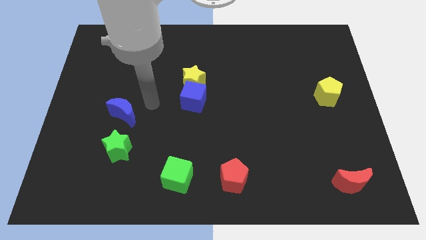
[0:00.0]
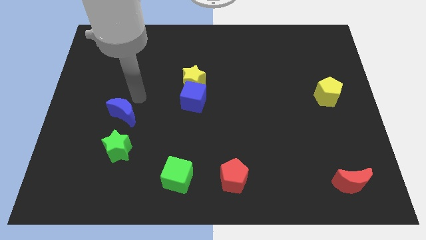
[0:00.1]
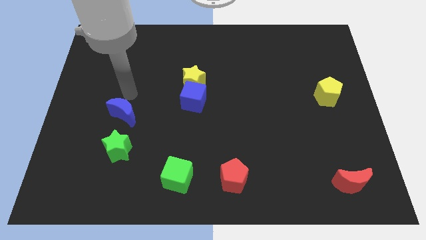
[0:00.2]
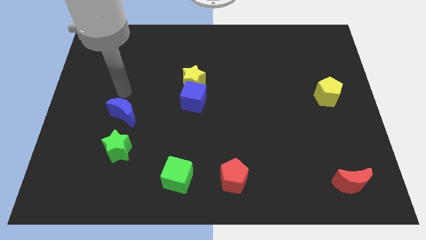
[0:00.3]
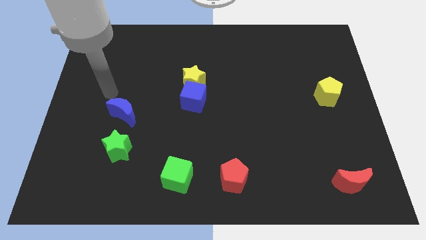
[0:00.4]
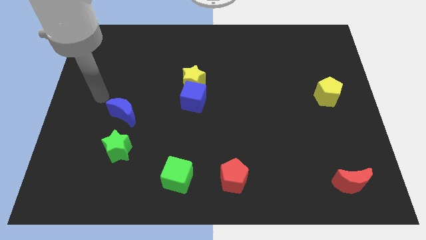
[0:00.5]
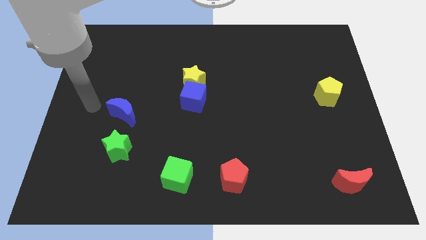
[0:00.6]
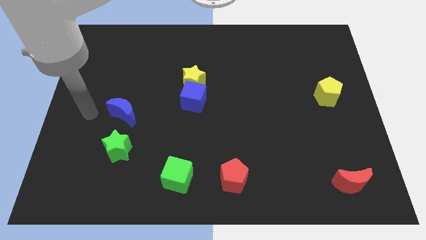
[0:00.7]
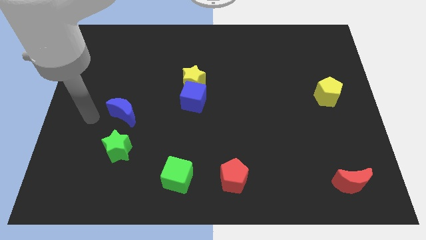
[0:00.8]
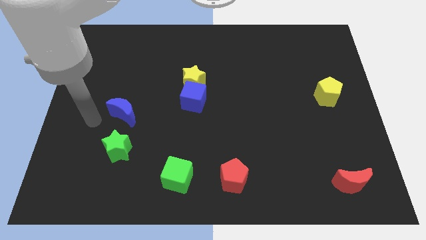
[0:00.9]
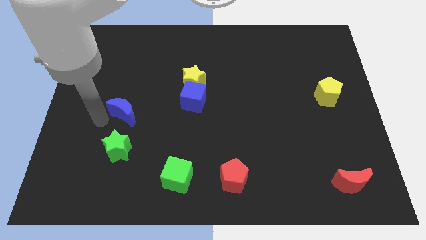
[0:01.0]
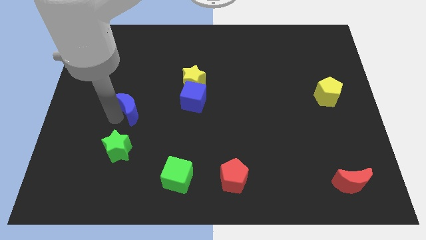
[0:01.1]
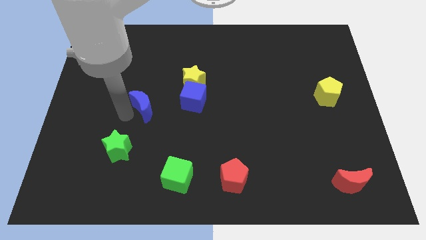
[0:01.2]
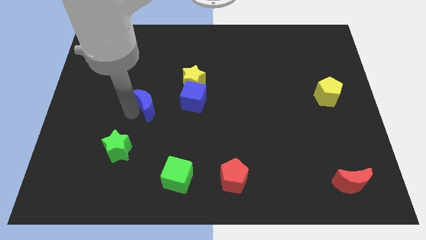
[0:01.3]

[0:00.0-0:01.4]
drag the blue crescent diagonally on the top right side of the green star

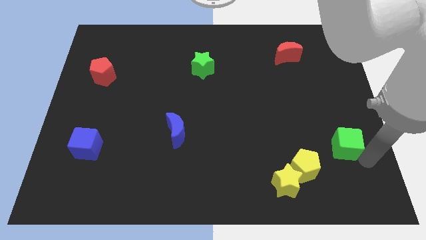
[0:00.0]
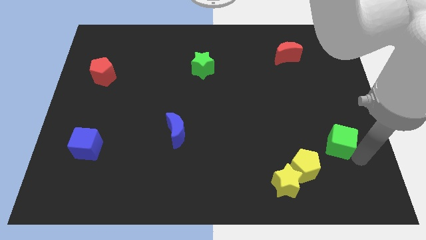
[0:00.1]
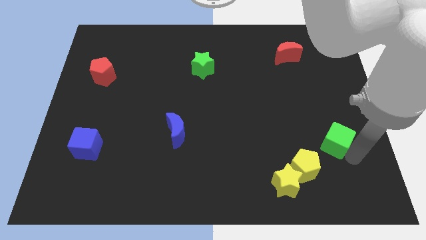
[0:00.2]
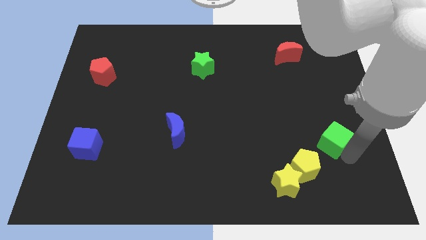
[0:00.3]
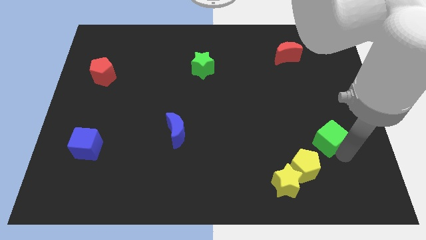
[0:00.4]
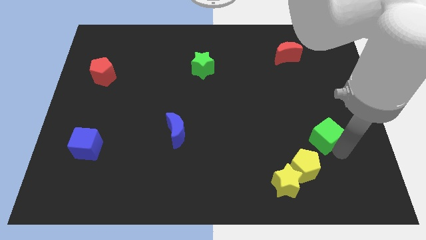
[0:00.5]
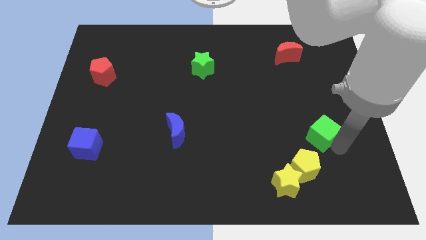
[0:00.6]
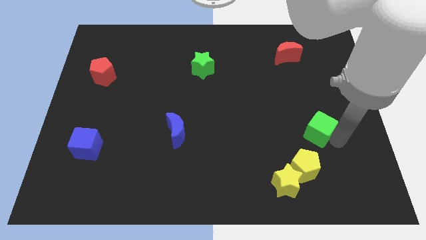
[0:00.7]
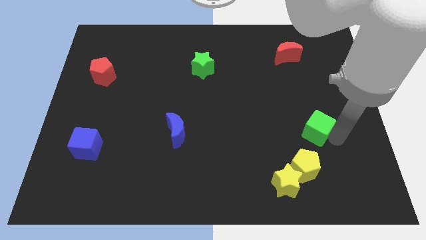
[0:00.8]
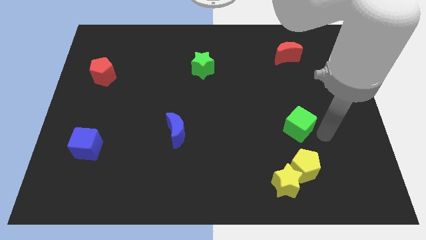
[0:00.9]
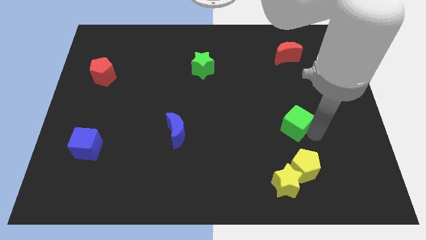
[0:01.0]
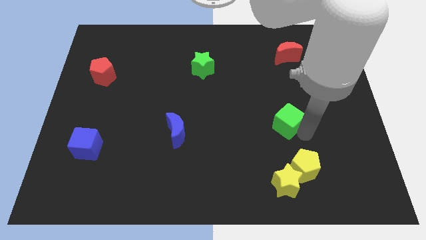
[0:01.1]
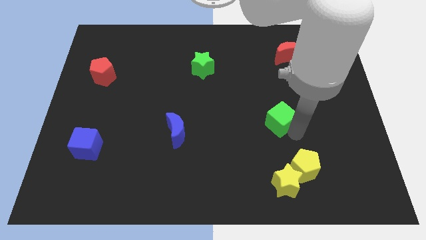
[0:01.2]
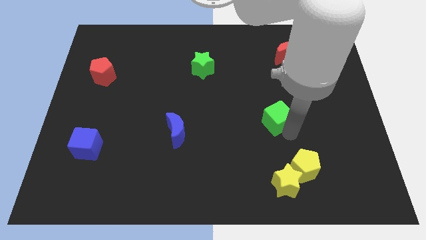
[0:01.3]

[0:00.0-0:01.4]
push the green cube towards the center of the board

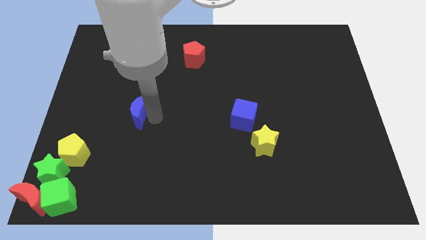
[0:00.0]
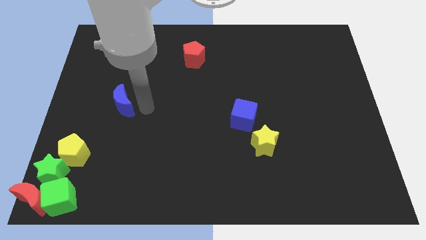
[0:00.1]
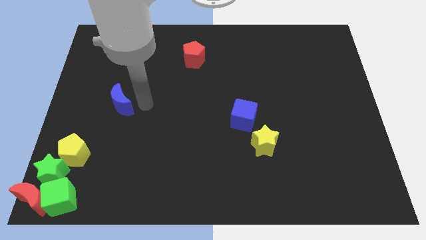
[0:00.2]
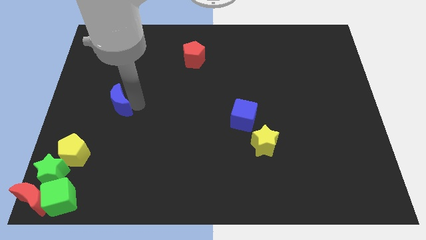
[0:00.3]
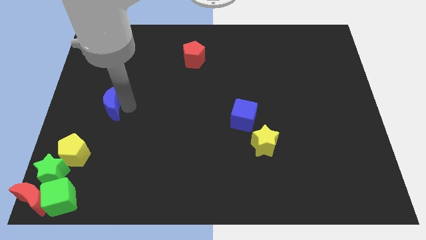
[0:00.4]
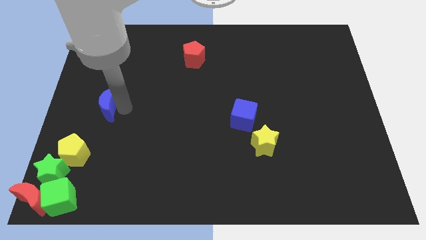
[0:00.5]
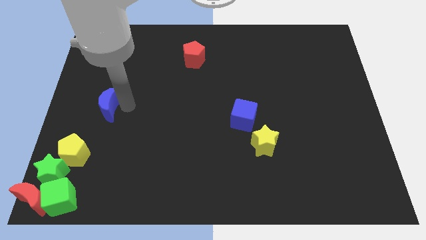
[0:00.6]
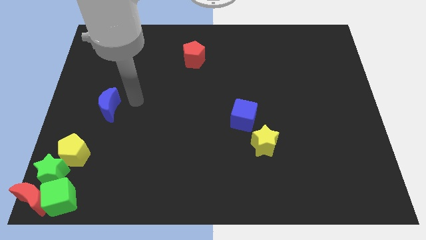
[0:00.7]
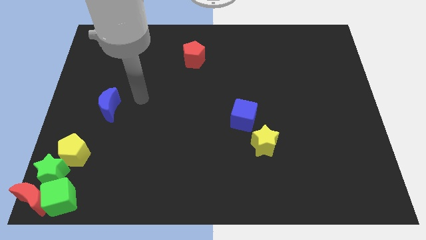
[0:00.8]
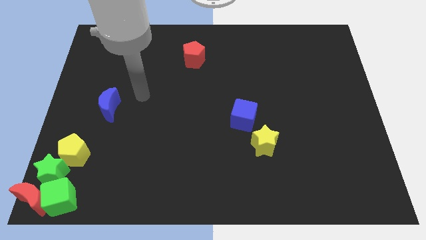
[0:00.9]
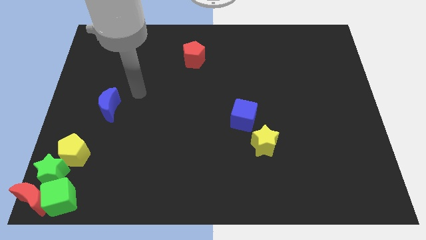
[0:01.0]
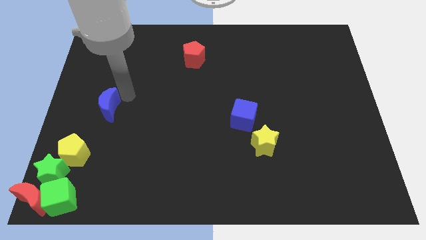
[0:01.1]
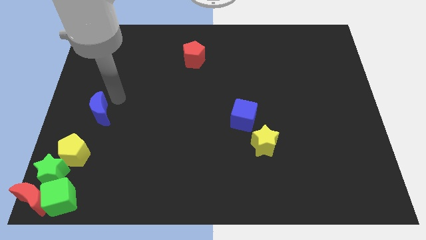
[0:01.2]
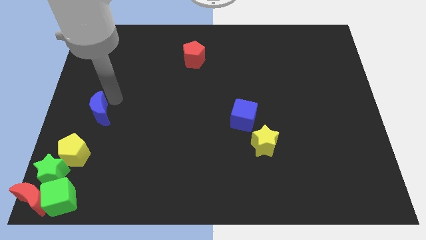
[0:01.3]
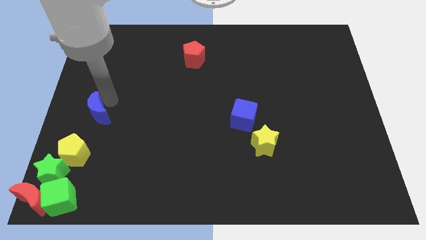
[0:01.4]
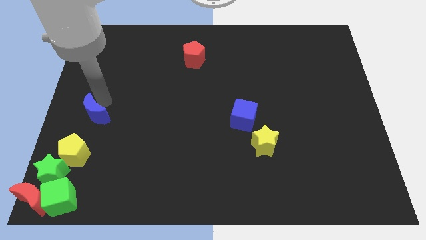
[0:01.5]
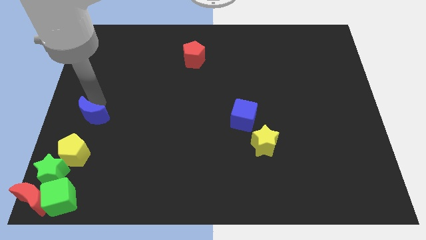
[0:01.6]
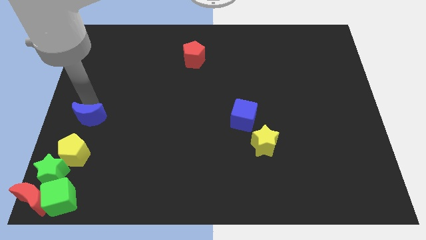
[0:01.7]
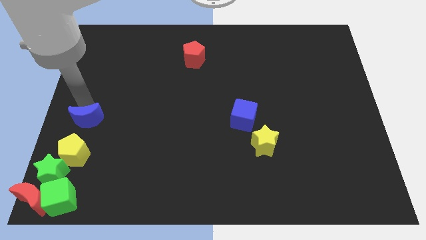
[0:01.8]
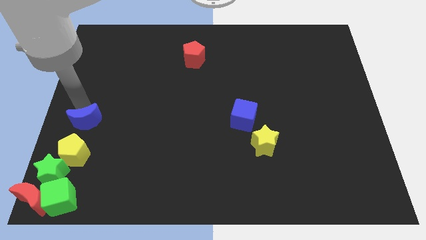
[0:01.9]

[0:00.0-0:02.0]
push the blue moon to the left side of the board

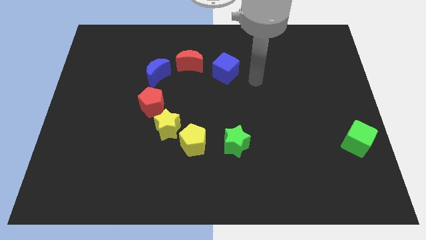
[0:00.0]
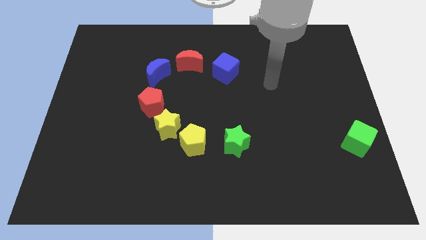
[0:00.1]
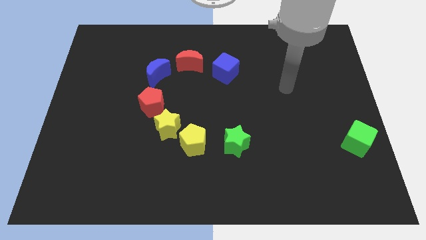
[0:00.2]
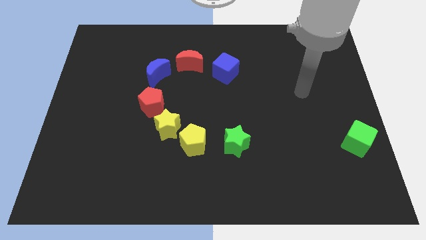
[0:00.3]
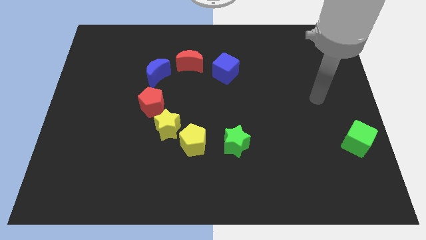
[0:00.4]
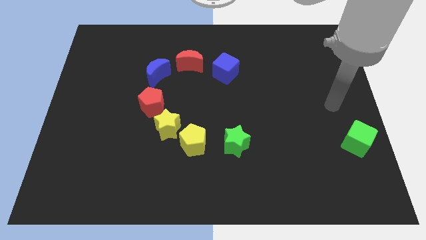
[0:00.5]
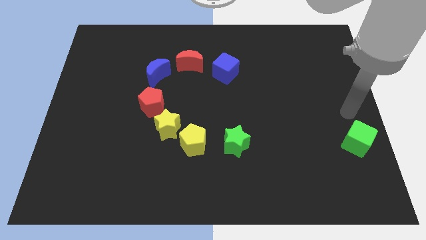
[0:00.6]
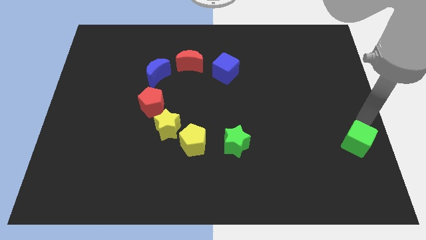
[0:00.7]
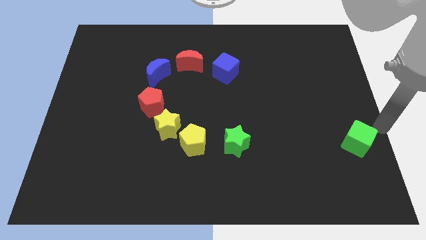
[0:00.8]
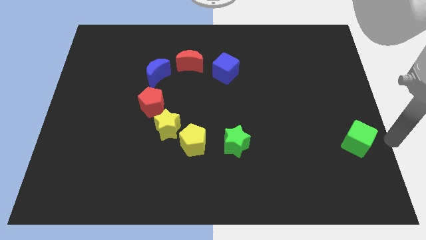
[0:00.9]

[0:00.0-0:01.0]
move the arm to the right of the green cube

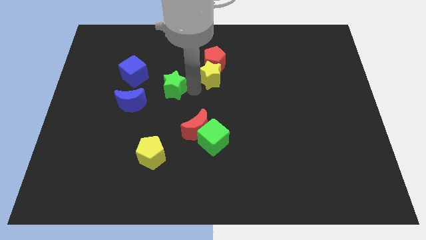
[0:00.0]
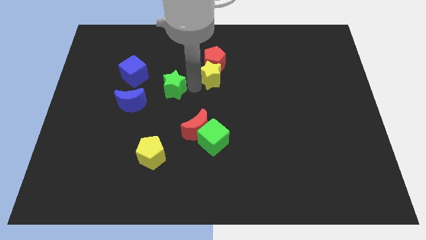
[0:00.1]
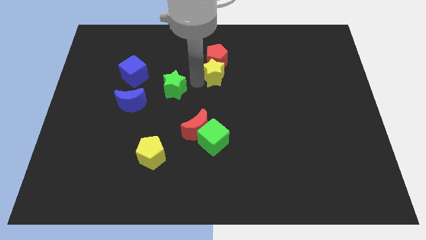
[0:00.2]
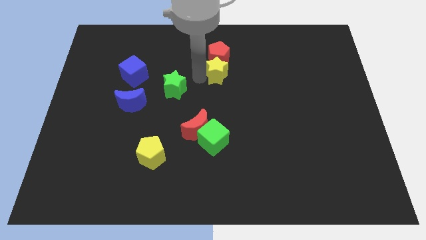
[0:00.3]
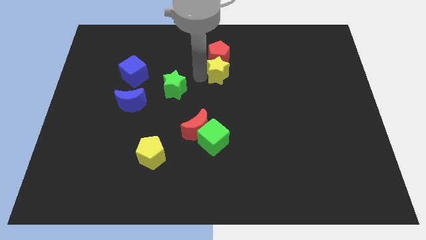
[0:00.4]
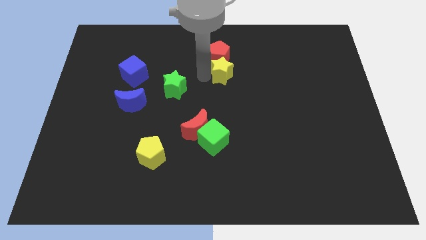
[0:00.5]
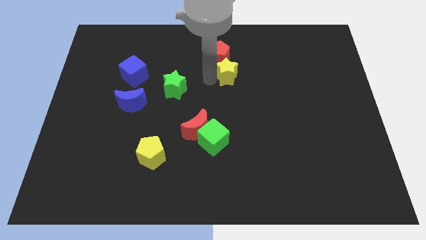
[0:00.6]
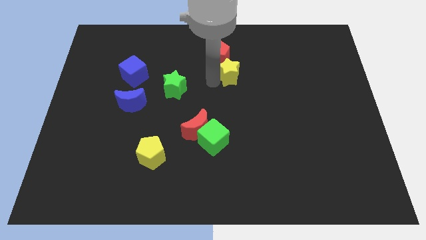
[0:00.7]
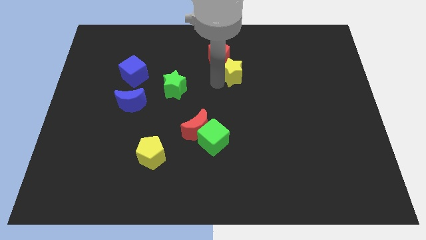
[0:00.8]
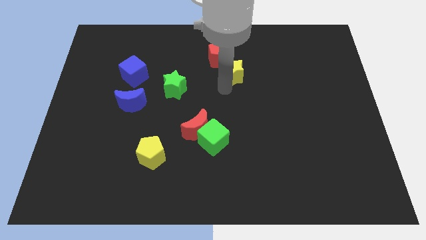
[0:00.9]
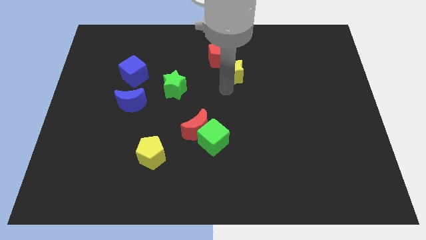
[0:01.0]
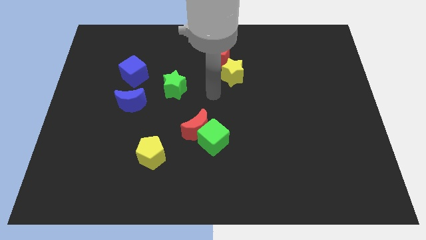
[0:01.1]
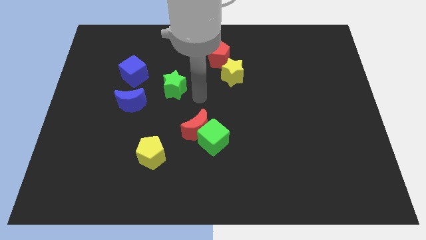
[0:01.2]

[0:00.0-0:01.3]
place the yellow star diagonally bottom right to the red pentagon

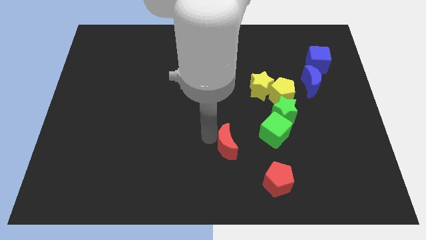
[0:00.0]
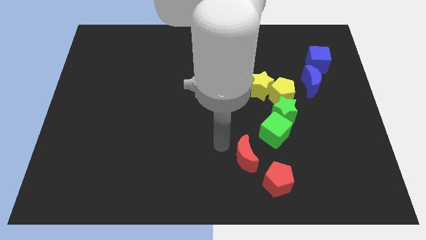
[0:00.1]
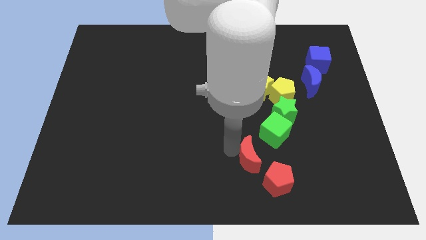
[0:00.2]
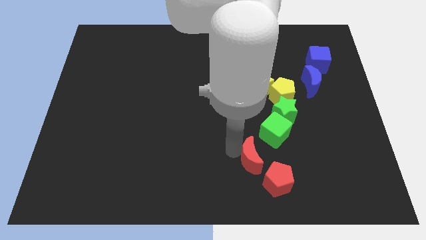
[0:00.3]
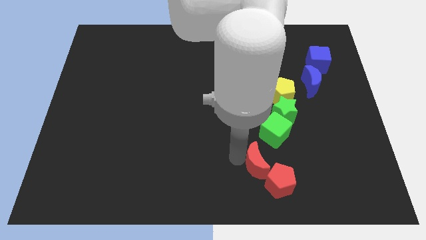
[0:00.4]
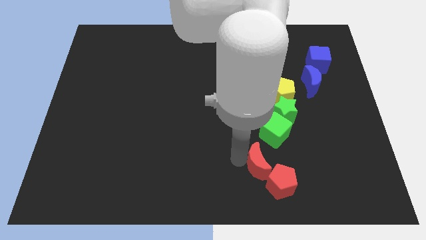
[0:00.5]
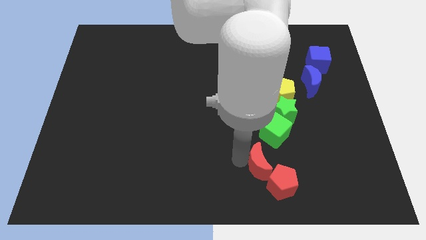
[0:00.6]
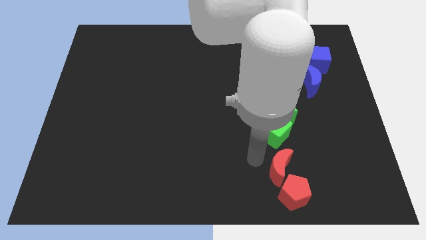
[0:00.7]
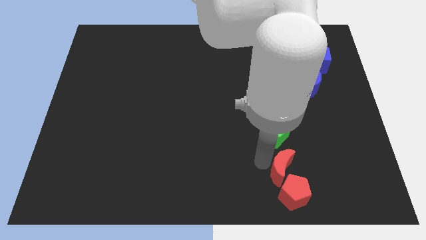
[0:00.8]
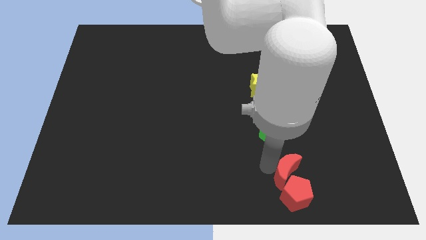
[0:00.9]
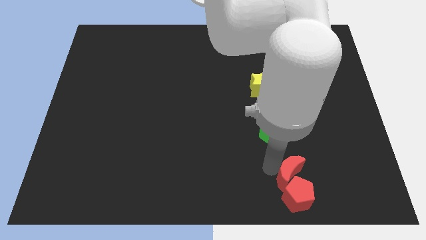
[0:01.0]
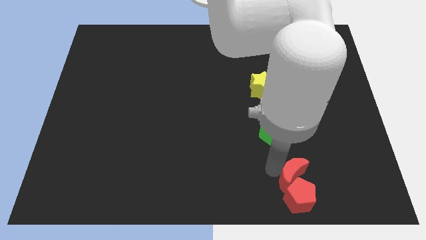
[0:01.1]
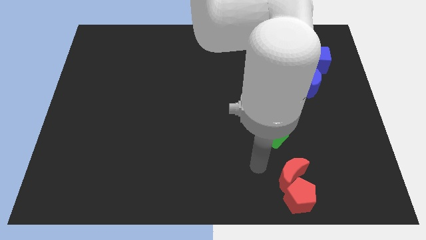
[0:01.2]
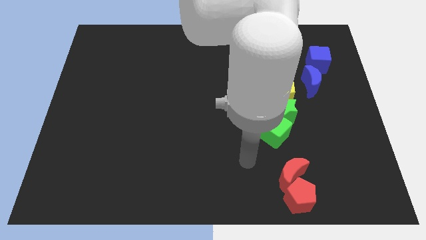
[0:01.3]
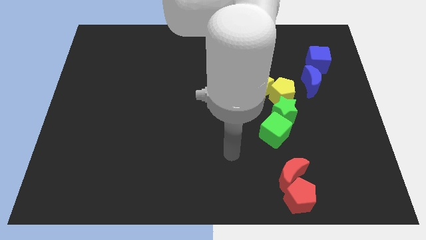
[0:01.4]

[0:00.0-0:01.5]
move red crescent along with red pentagon to the bottom right side of the board

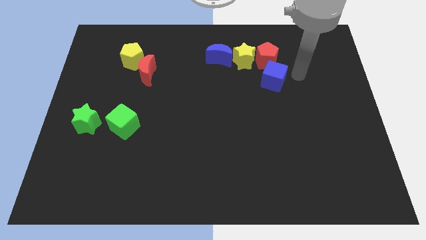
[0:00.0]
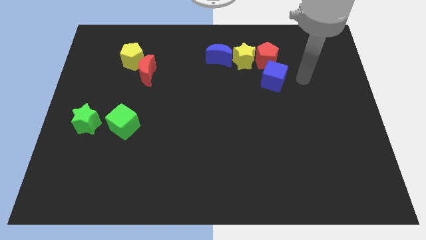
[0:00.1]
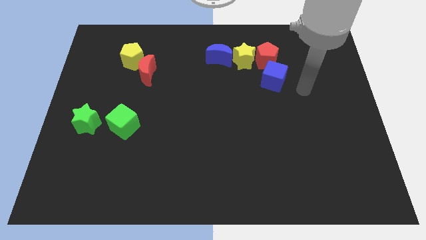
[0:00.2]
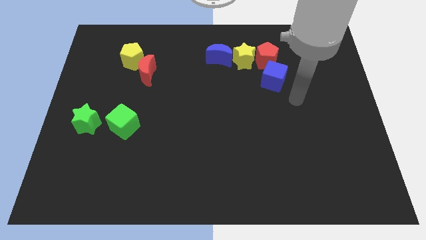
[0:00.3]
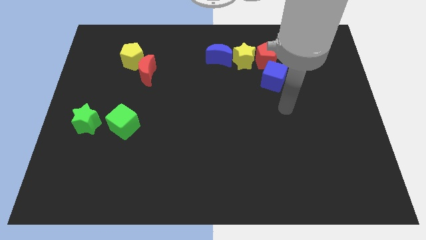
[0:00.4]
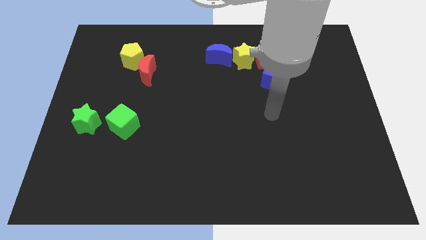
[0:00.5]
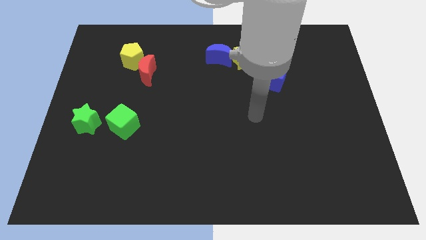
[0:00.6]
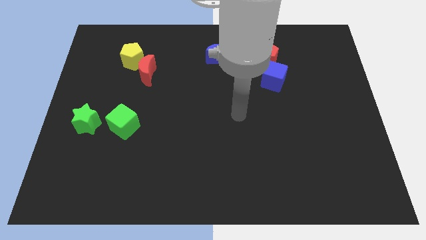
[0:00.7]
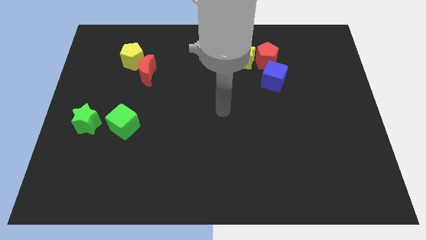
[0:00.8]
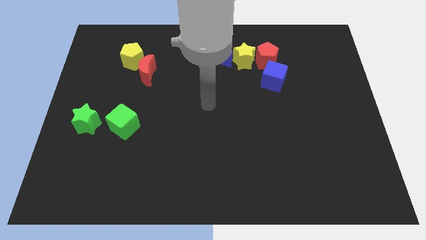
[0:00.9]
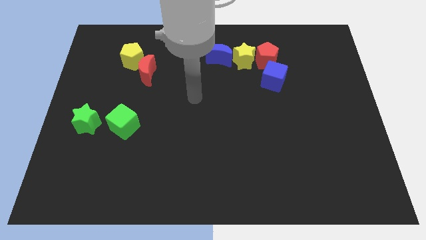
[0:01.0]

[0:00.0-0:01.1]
go away from the blue cube
